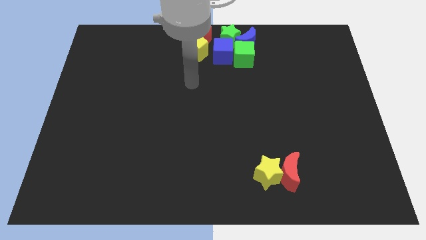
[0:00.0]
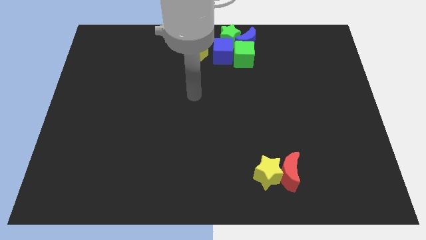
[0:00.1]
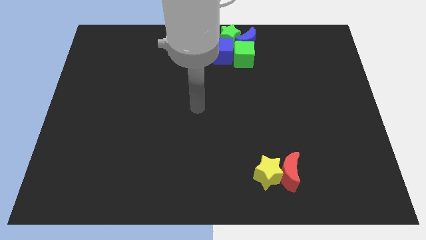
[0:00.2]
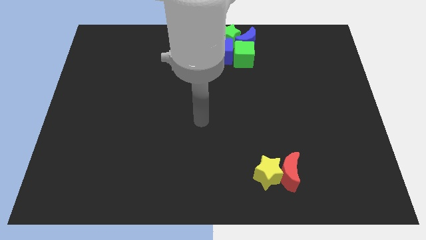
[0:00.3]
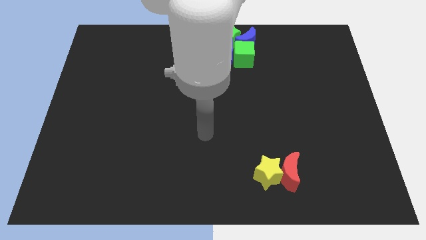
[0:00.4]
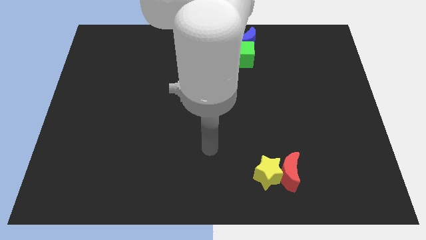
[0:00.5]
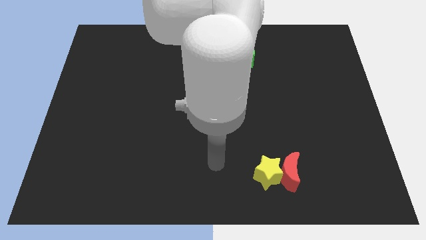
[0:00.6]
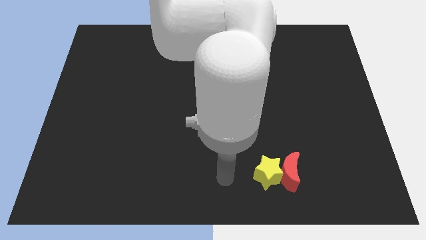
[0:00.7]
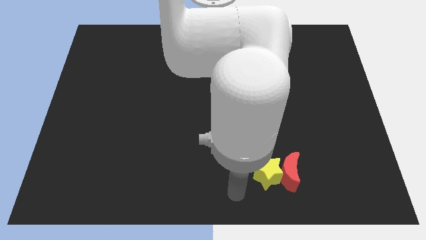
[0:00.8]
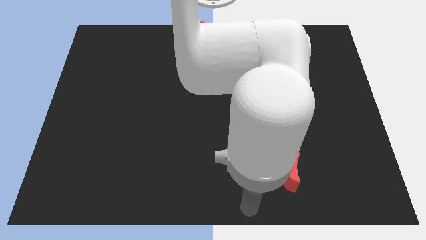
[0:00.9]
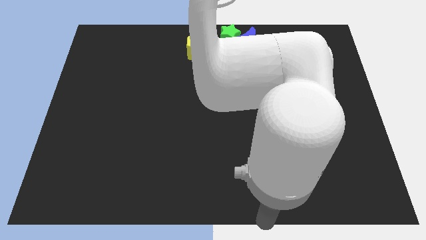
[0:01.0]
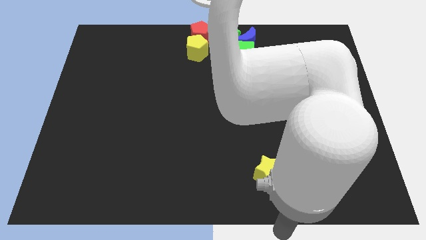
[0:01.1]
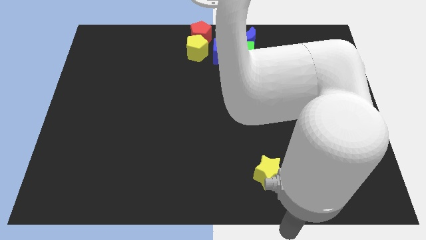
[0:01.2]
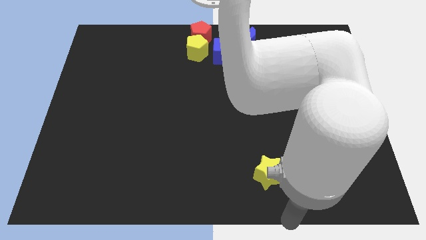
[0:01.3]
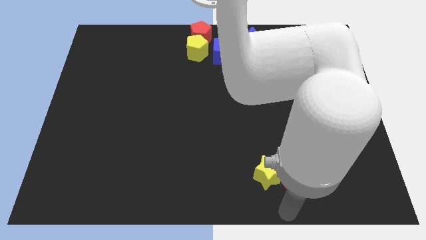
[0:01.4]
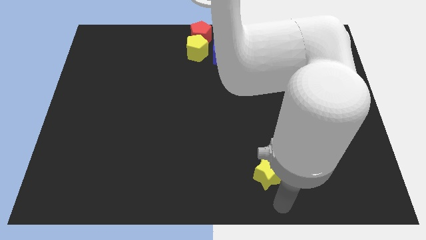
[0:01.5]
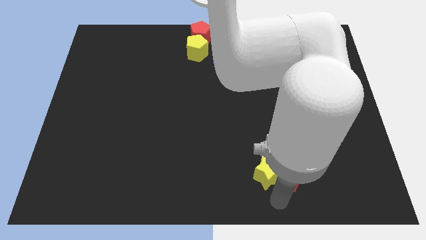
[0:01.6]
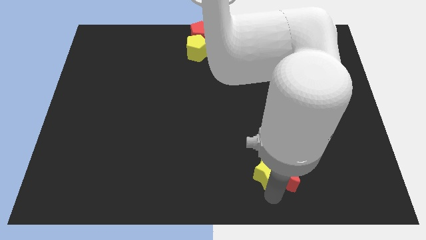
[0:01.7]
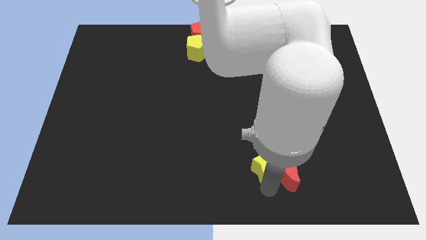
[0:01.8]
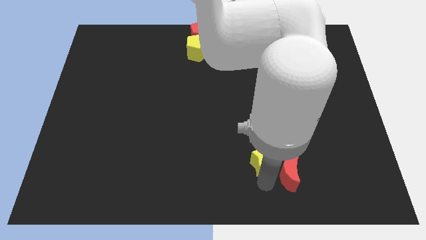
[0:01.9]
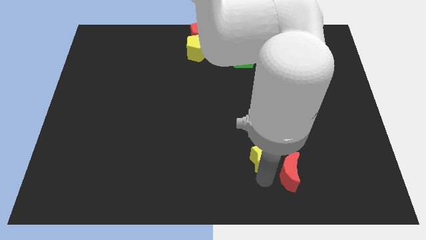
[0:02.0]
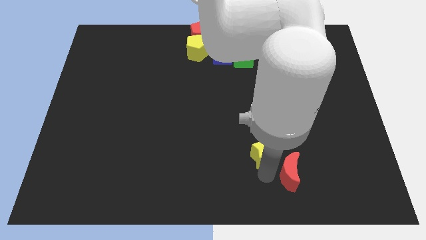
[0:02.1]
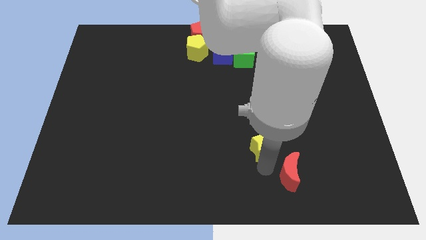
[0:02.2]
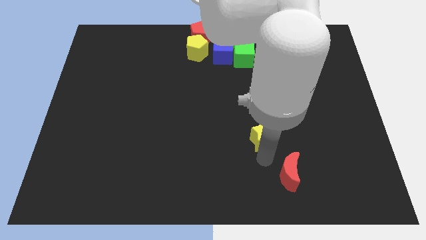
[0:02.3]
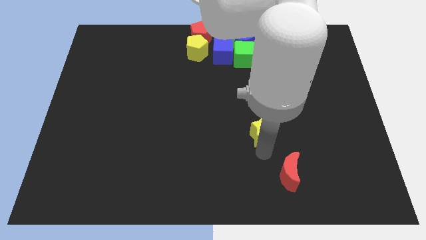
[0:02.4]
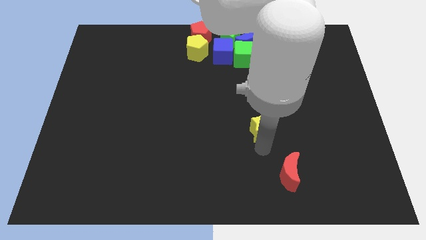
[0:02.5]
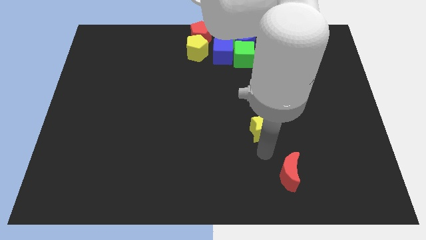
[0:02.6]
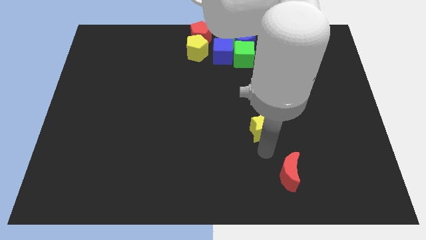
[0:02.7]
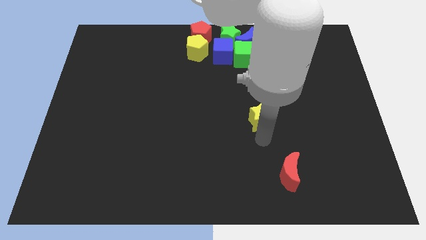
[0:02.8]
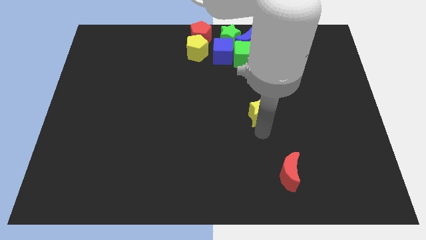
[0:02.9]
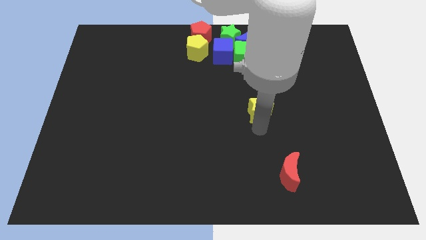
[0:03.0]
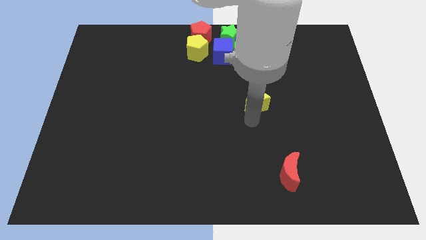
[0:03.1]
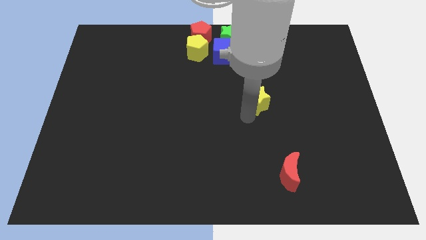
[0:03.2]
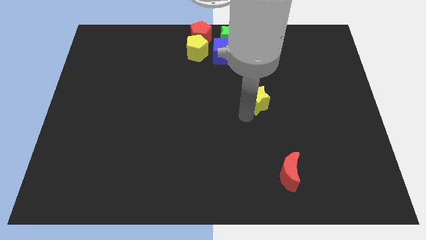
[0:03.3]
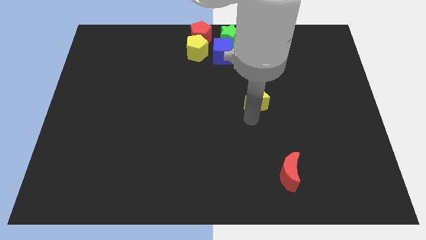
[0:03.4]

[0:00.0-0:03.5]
separate the yellow star from the red moon

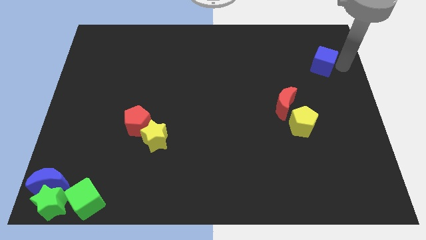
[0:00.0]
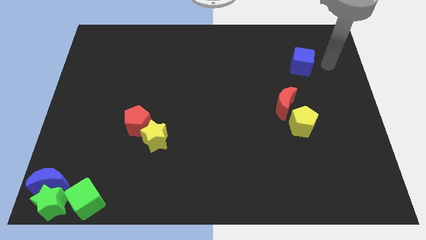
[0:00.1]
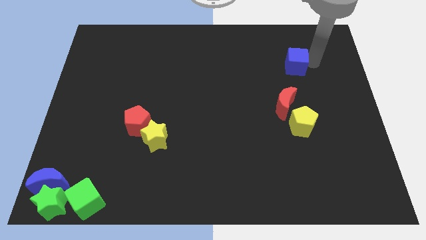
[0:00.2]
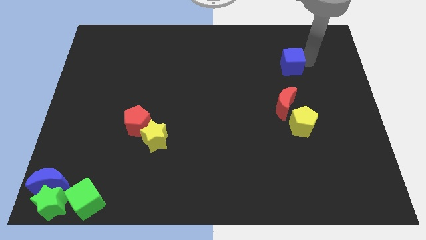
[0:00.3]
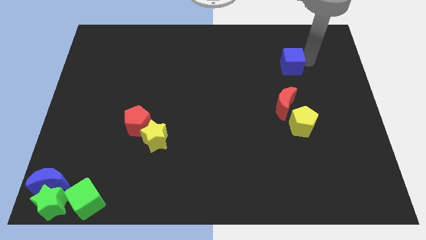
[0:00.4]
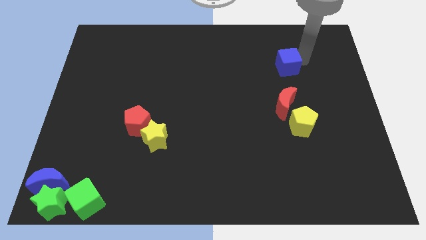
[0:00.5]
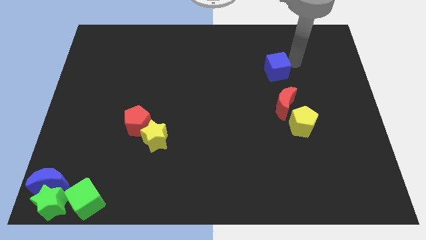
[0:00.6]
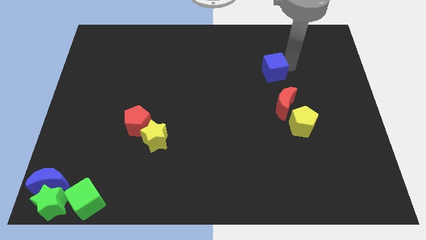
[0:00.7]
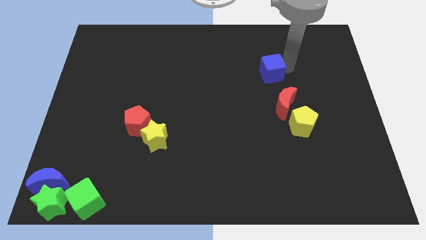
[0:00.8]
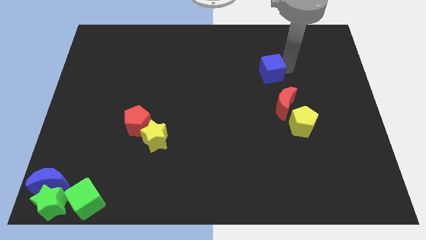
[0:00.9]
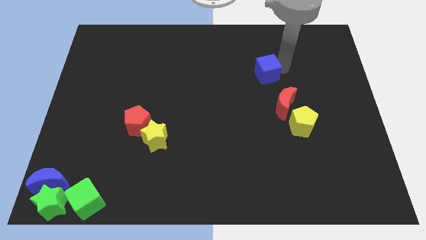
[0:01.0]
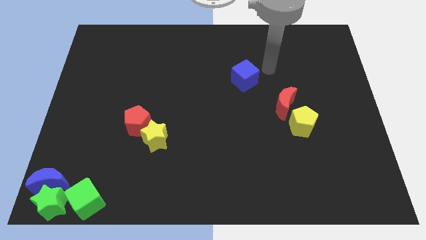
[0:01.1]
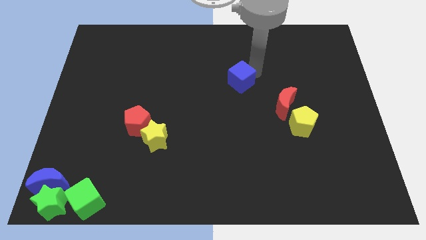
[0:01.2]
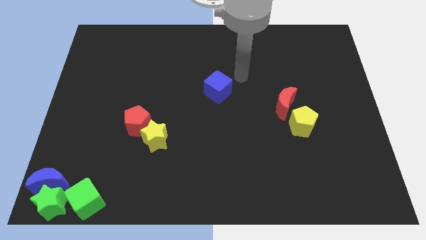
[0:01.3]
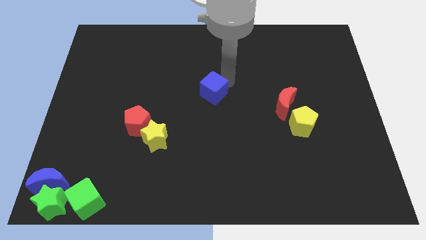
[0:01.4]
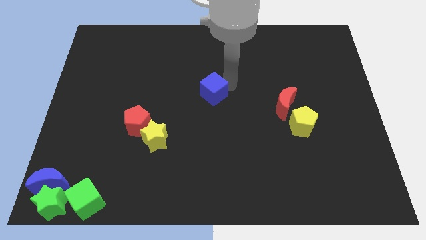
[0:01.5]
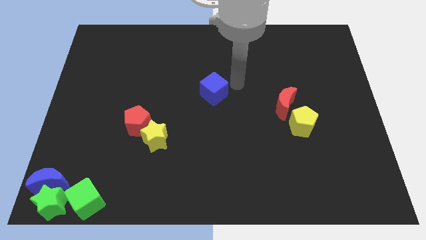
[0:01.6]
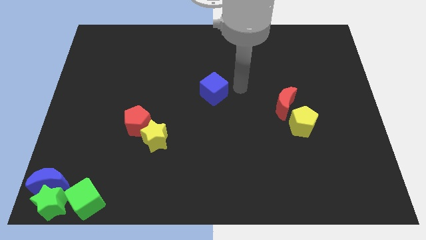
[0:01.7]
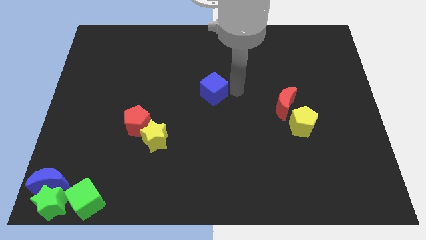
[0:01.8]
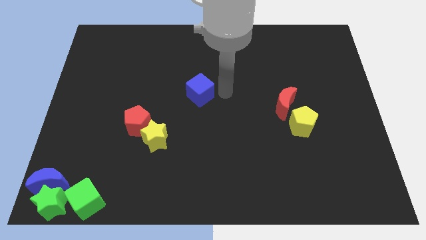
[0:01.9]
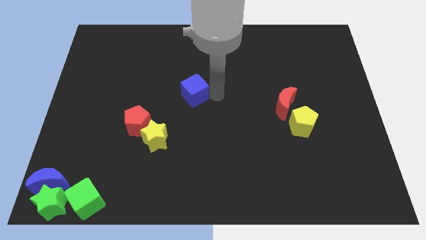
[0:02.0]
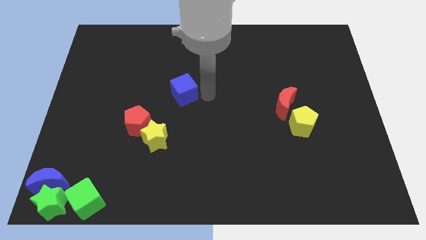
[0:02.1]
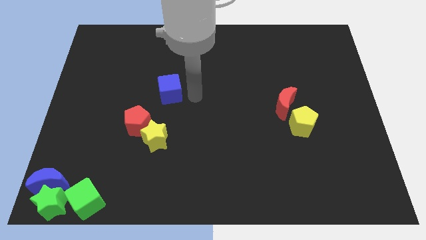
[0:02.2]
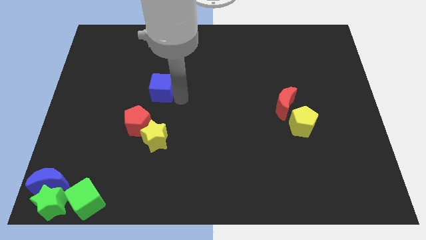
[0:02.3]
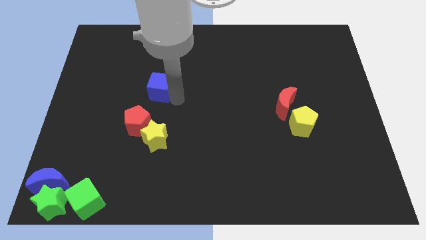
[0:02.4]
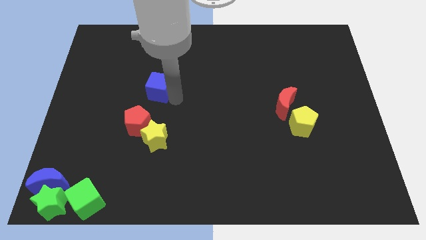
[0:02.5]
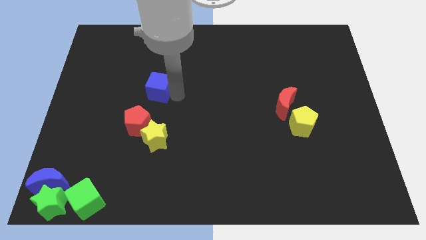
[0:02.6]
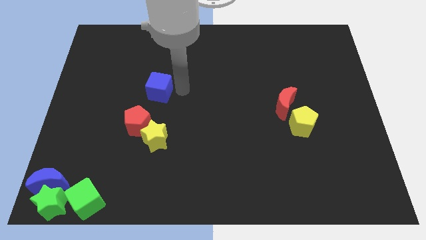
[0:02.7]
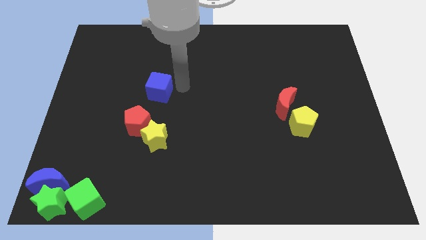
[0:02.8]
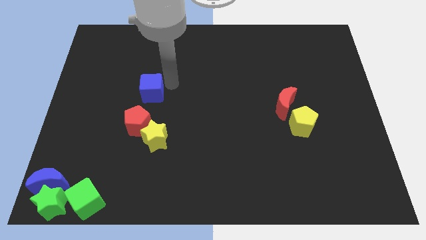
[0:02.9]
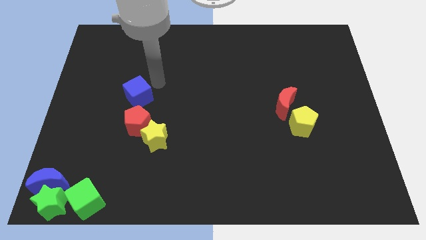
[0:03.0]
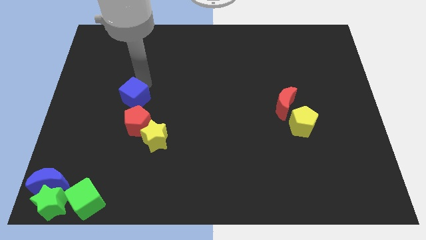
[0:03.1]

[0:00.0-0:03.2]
move the blue cube above the red pentagon

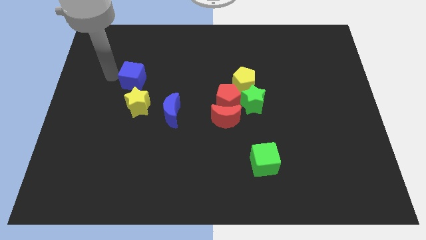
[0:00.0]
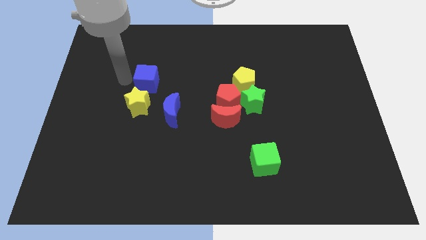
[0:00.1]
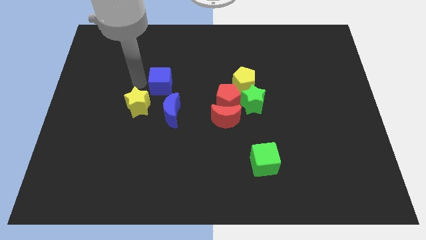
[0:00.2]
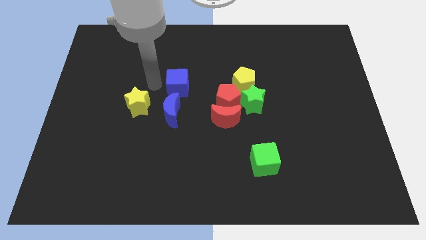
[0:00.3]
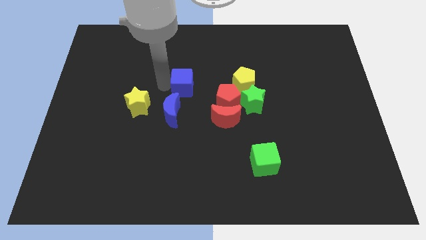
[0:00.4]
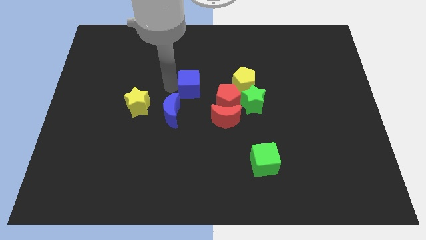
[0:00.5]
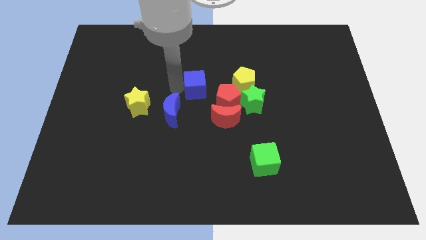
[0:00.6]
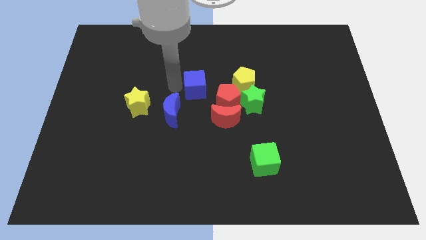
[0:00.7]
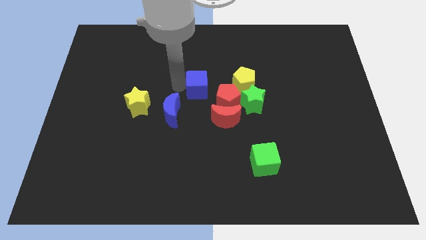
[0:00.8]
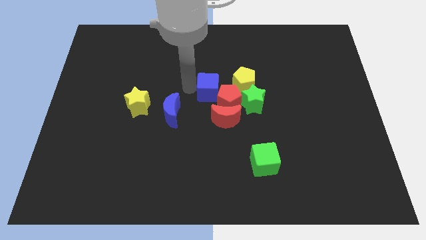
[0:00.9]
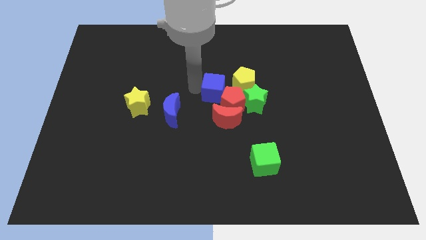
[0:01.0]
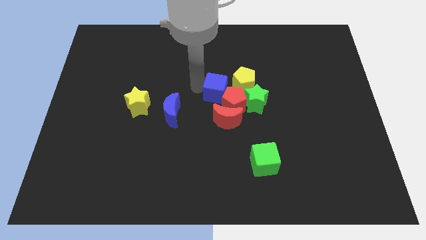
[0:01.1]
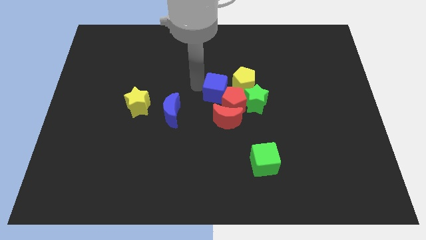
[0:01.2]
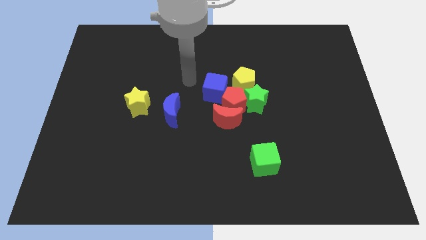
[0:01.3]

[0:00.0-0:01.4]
push the blue cube into the red pentagon

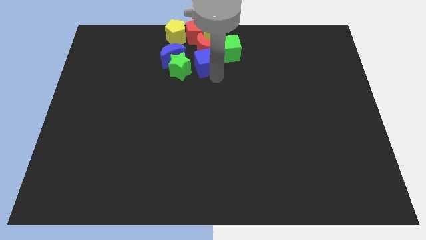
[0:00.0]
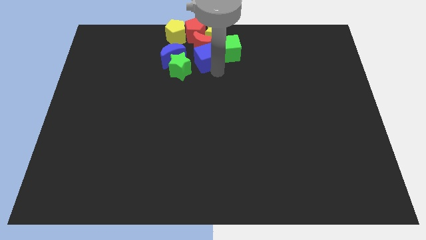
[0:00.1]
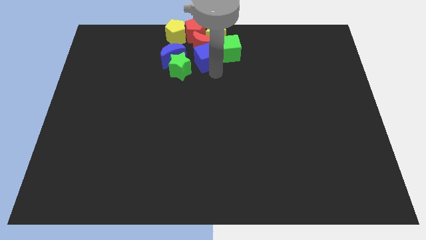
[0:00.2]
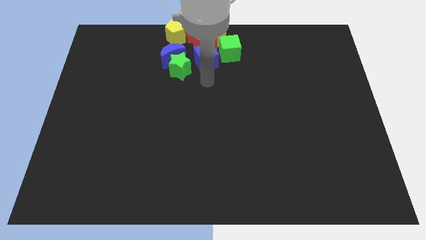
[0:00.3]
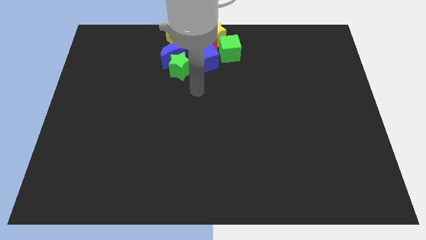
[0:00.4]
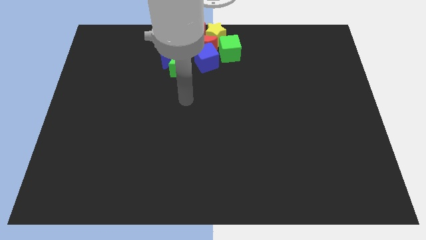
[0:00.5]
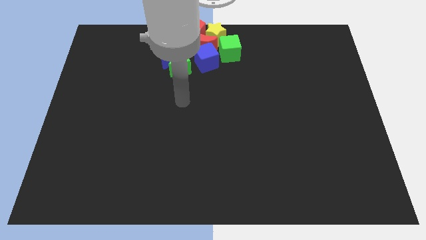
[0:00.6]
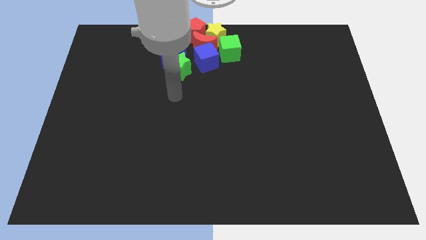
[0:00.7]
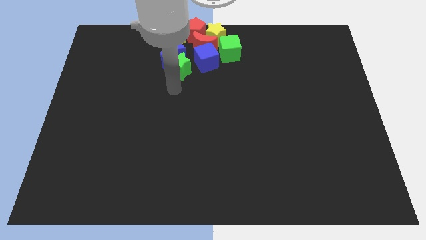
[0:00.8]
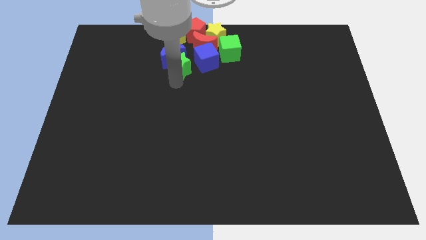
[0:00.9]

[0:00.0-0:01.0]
move away from the blue cube
